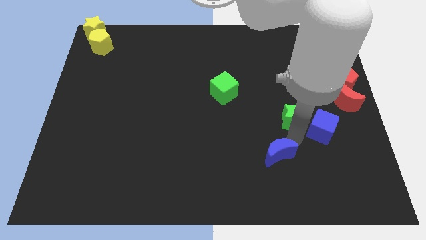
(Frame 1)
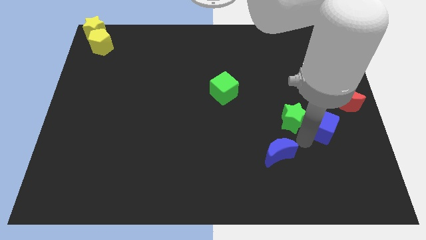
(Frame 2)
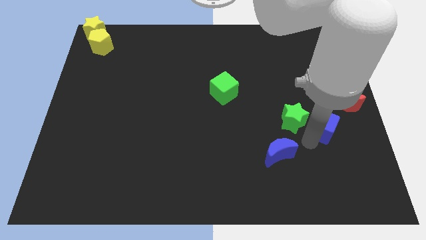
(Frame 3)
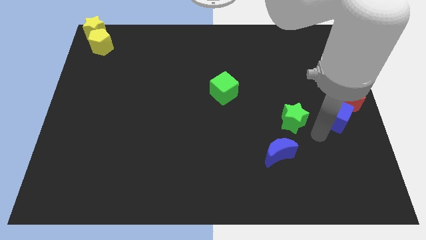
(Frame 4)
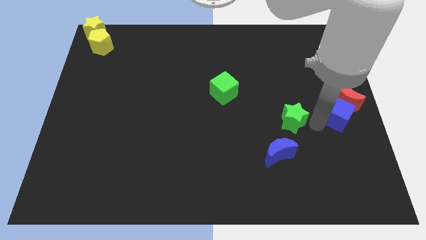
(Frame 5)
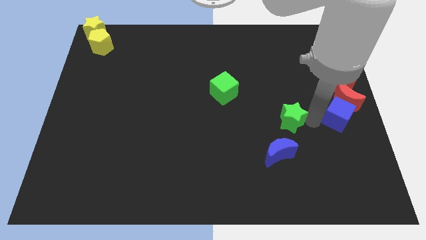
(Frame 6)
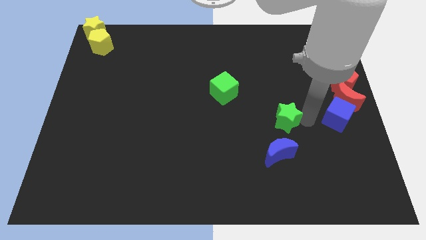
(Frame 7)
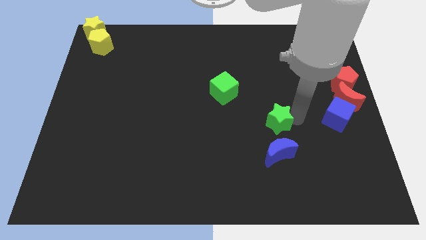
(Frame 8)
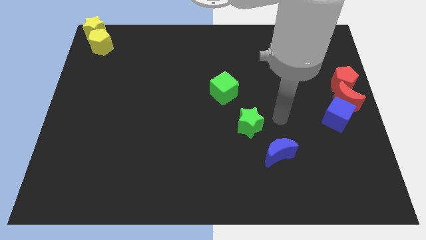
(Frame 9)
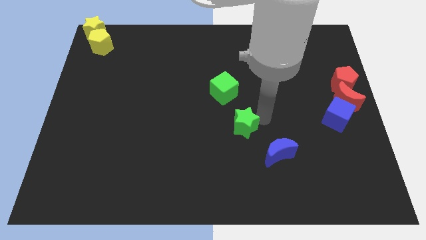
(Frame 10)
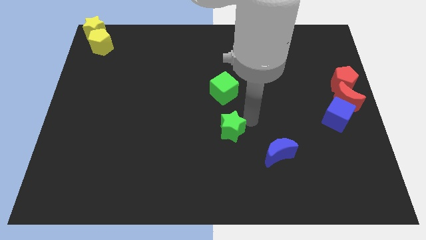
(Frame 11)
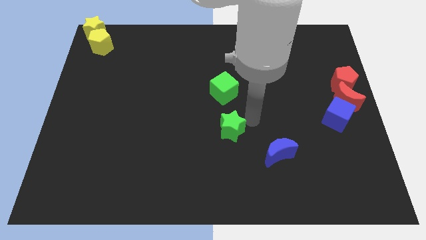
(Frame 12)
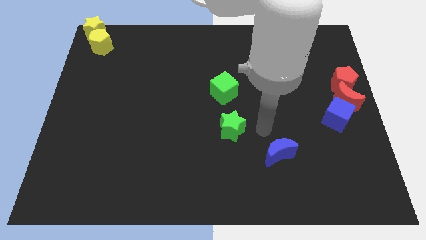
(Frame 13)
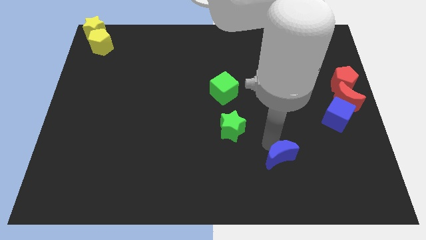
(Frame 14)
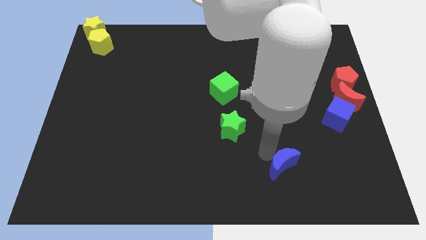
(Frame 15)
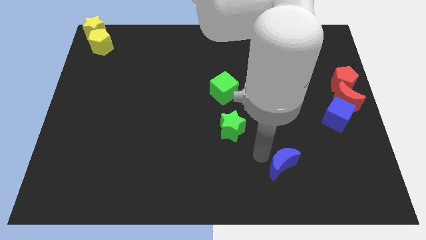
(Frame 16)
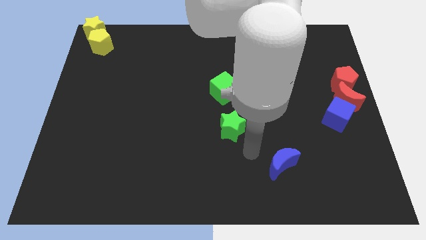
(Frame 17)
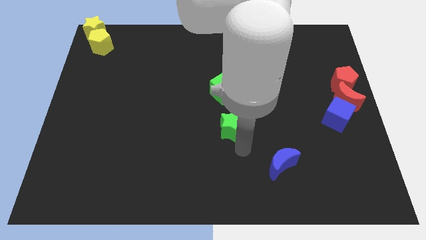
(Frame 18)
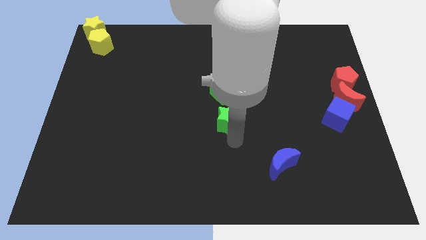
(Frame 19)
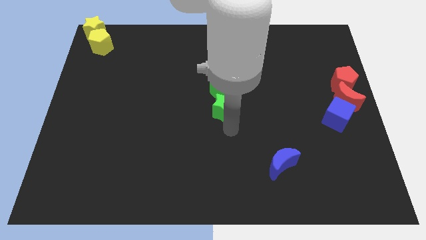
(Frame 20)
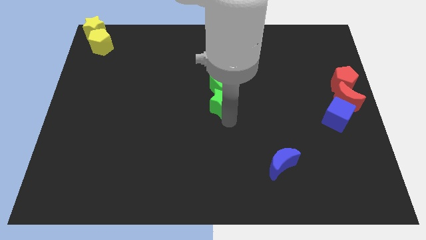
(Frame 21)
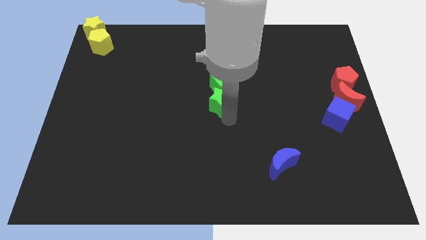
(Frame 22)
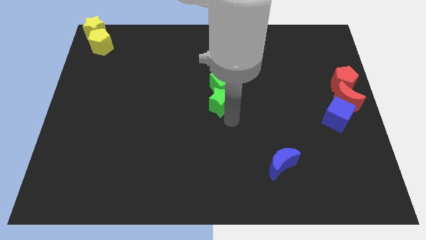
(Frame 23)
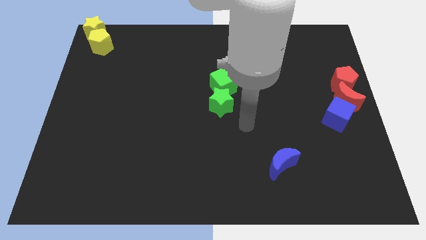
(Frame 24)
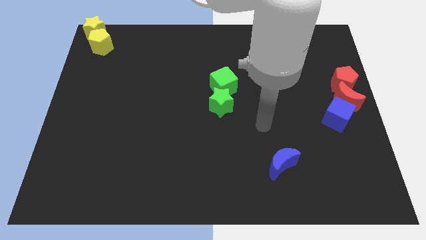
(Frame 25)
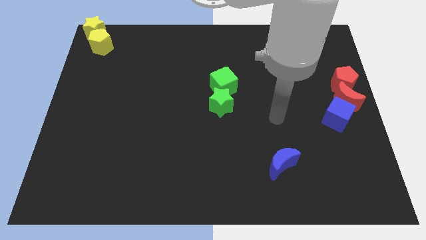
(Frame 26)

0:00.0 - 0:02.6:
push the green star into green cube

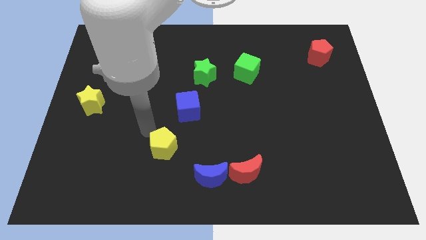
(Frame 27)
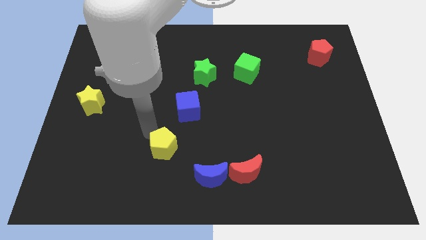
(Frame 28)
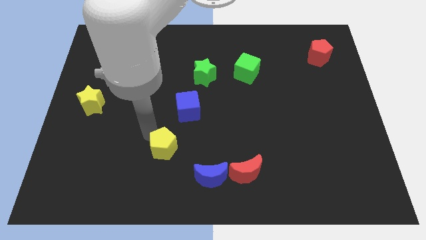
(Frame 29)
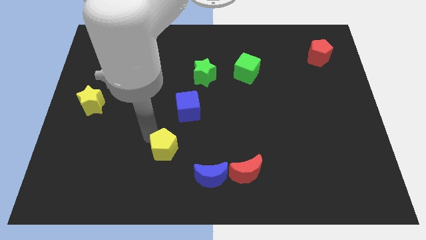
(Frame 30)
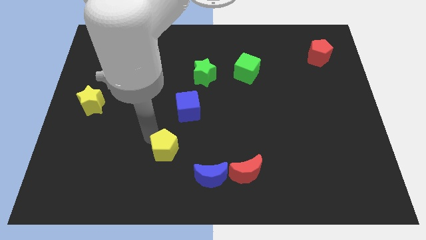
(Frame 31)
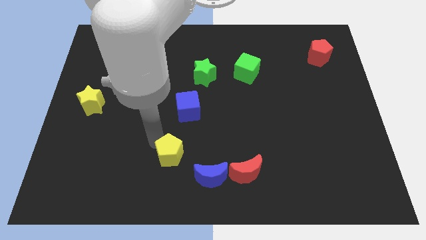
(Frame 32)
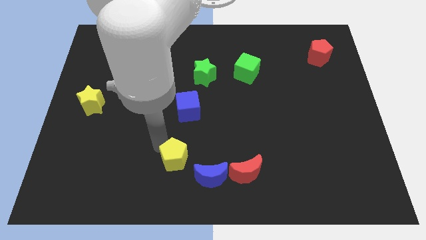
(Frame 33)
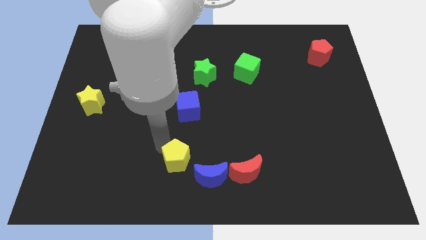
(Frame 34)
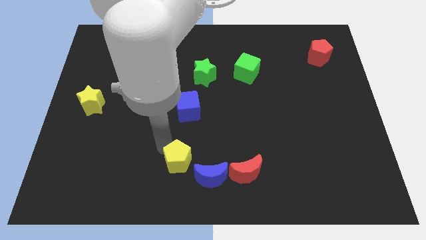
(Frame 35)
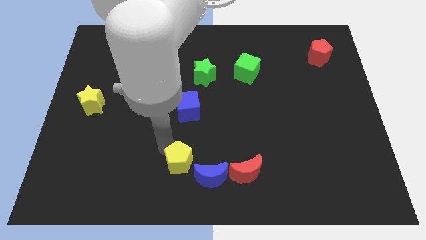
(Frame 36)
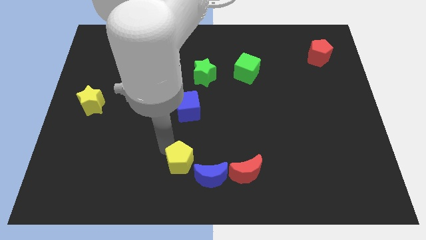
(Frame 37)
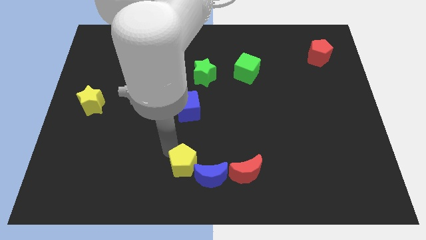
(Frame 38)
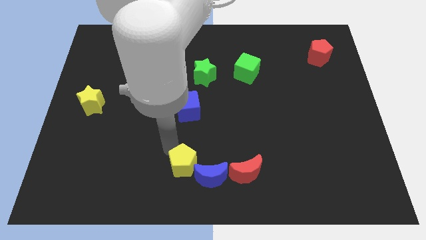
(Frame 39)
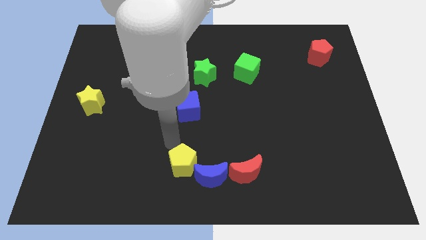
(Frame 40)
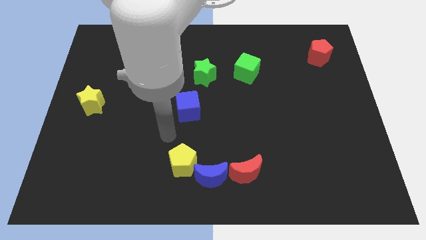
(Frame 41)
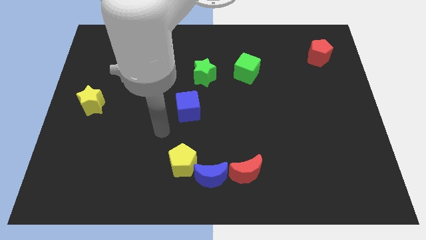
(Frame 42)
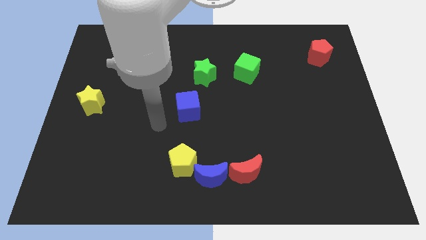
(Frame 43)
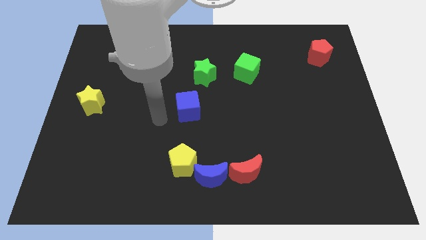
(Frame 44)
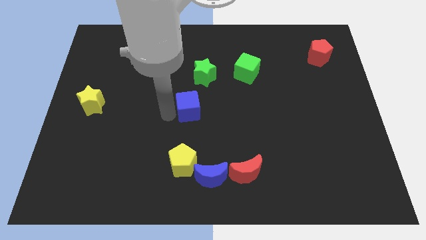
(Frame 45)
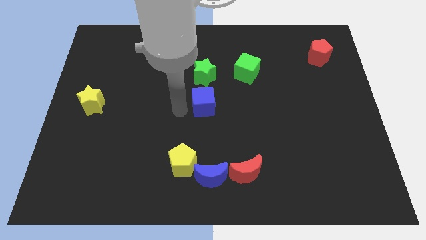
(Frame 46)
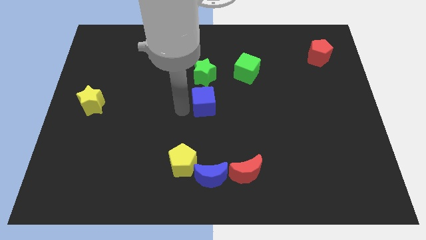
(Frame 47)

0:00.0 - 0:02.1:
push the yellow pentagon to the left of the blue moon

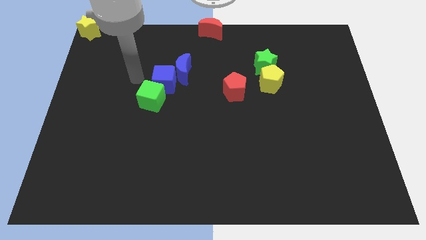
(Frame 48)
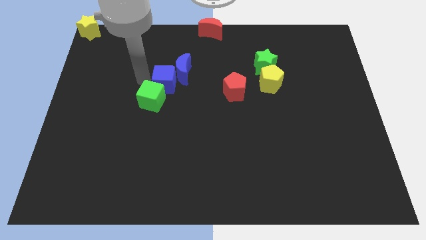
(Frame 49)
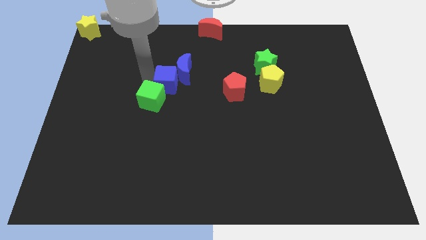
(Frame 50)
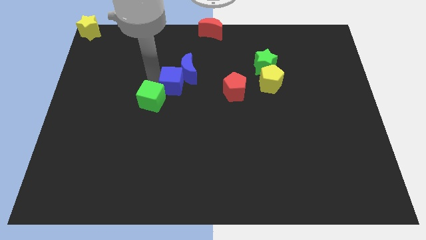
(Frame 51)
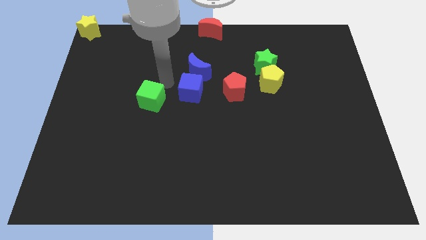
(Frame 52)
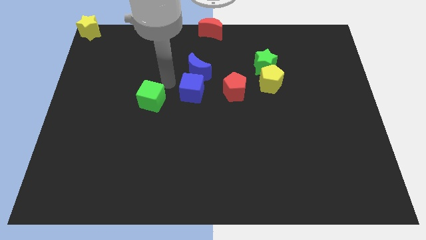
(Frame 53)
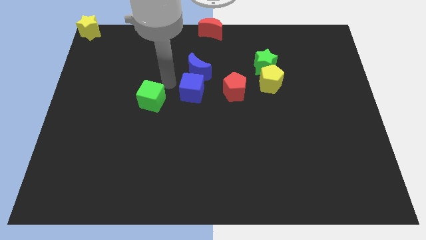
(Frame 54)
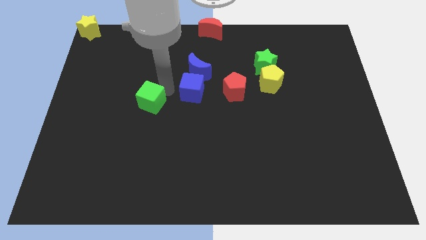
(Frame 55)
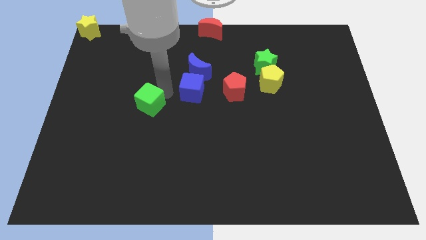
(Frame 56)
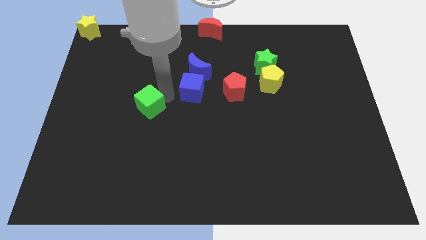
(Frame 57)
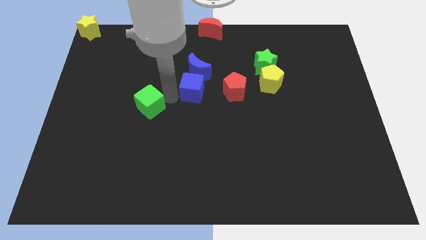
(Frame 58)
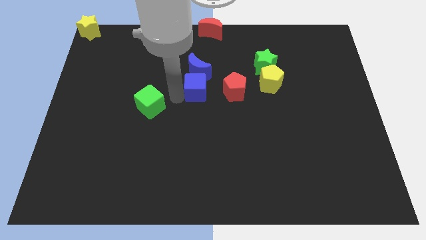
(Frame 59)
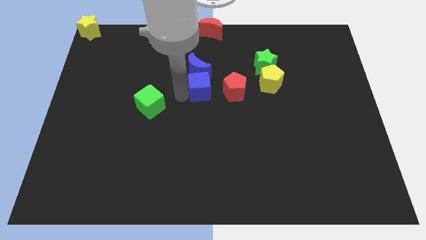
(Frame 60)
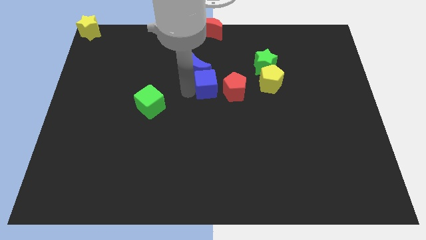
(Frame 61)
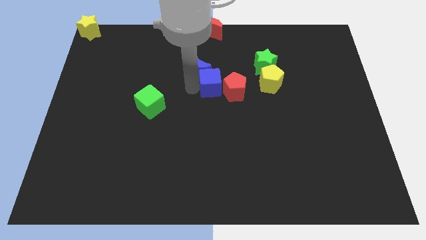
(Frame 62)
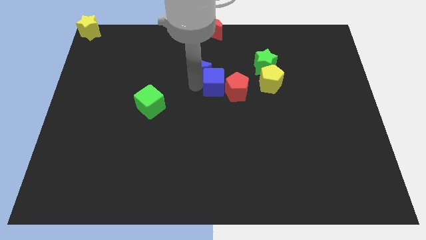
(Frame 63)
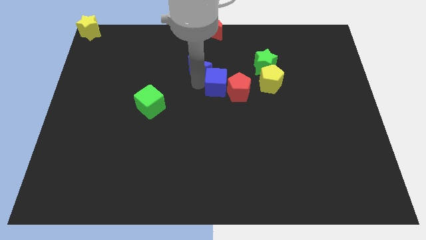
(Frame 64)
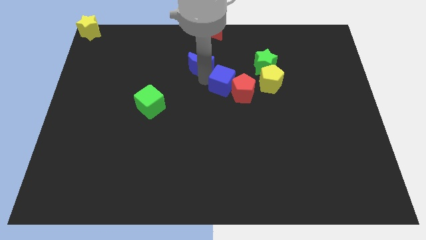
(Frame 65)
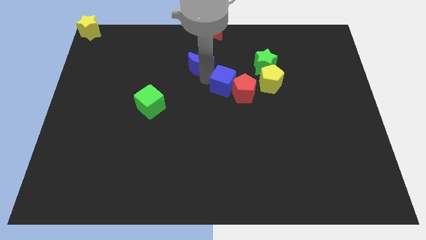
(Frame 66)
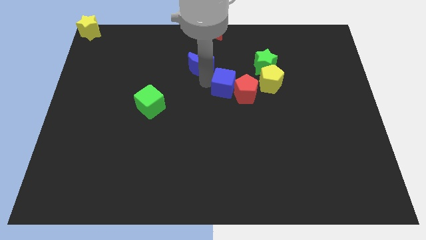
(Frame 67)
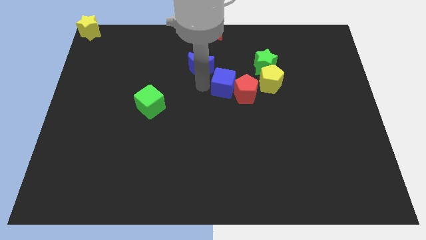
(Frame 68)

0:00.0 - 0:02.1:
put the blue cube into the red pentagon

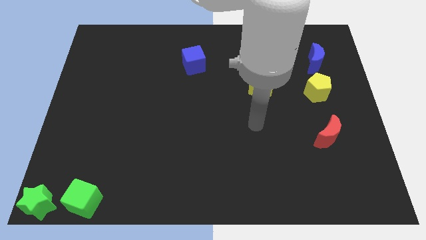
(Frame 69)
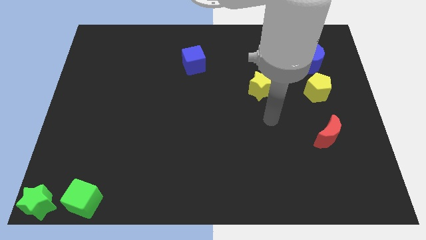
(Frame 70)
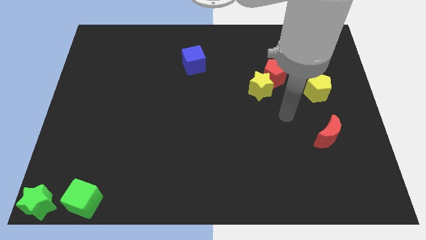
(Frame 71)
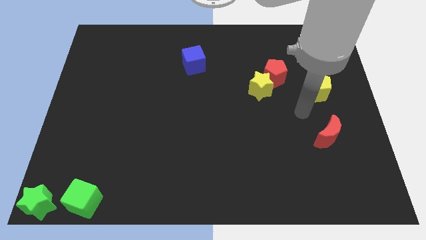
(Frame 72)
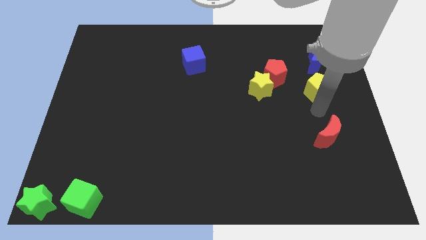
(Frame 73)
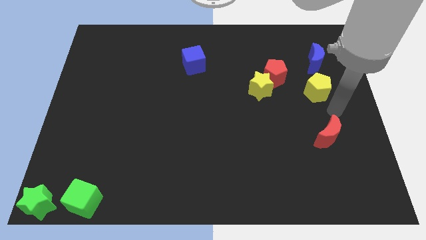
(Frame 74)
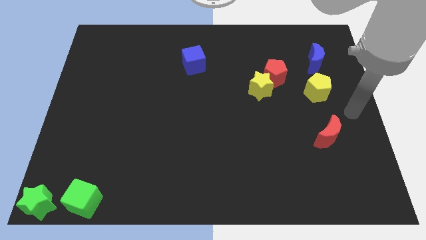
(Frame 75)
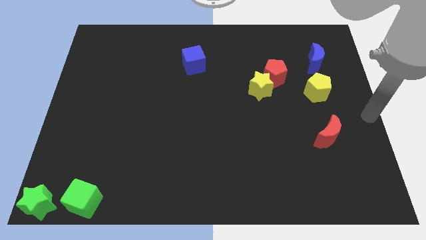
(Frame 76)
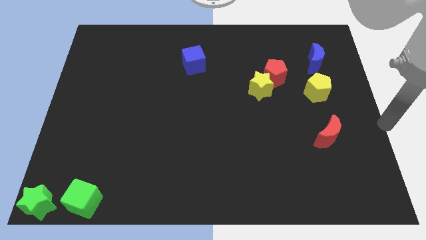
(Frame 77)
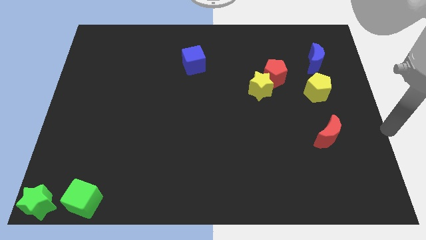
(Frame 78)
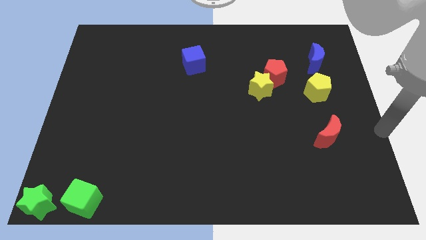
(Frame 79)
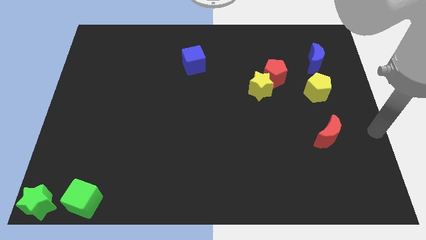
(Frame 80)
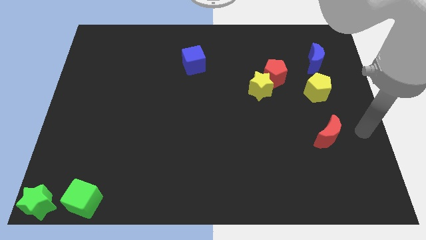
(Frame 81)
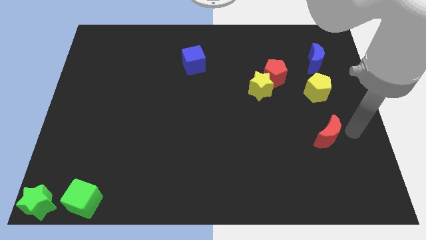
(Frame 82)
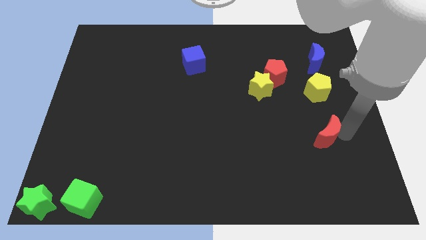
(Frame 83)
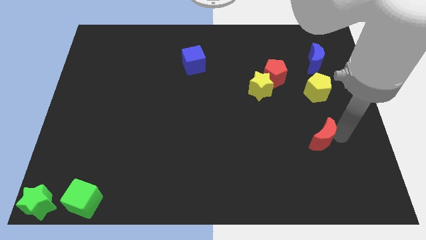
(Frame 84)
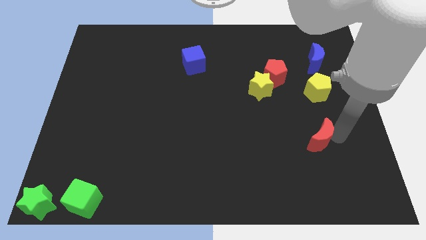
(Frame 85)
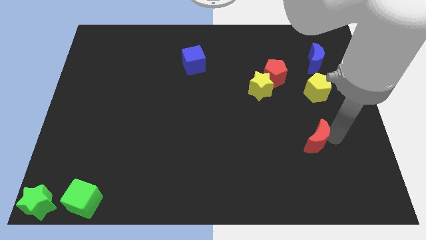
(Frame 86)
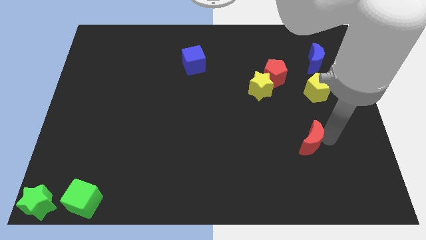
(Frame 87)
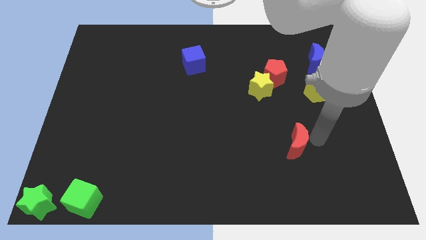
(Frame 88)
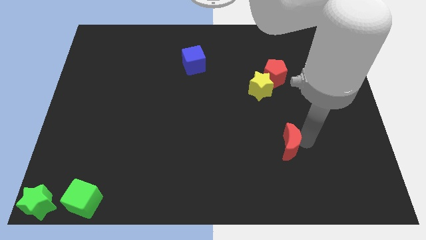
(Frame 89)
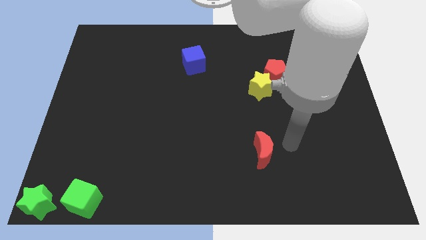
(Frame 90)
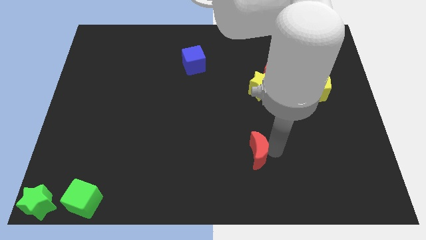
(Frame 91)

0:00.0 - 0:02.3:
place the red moon vertically below the yellow star
